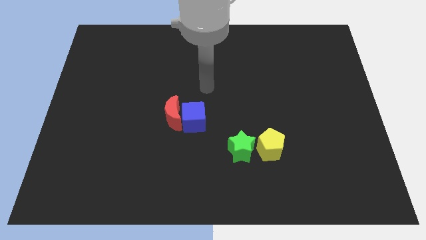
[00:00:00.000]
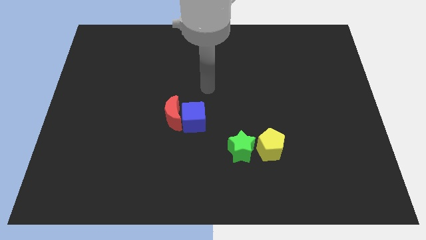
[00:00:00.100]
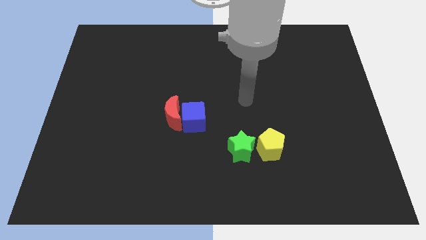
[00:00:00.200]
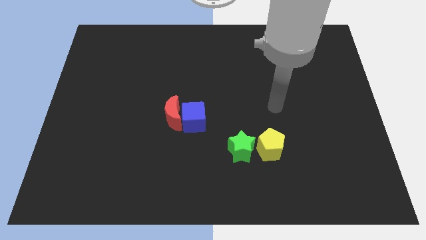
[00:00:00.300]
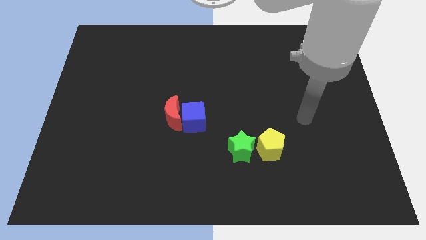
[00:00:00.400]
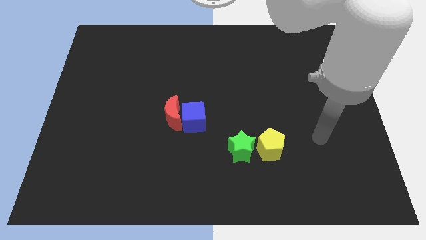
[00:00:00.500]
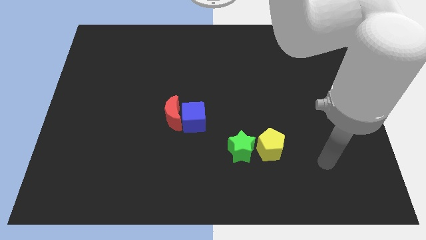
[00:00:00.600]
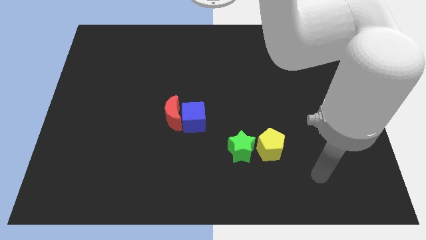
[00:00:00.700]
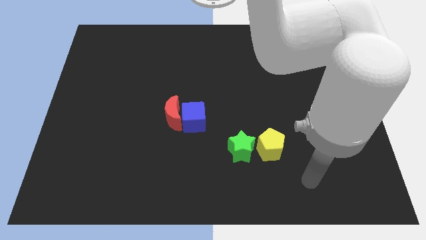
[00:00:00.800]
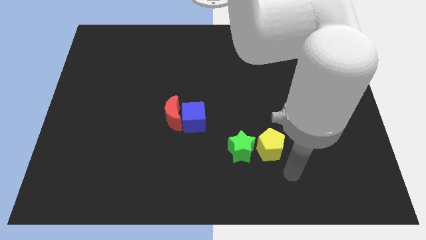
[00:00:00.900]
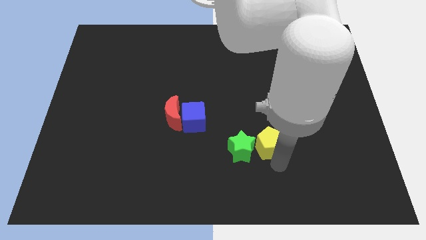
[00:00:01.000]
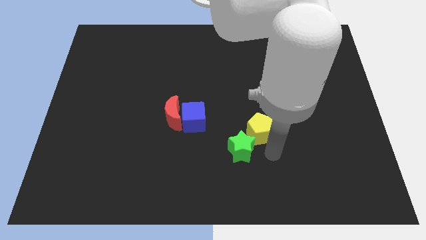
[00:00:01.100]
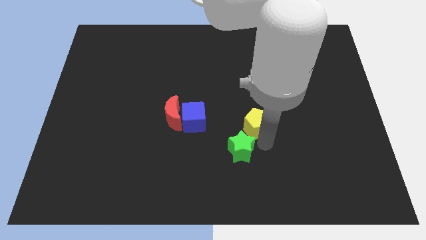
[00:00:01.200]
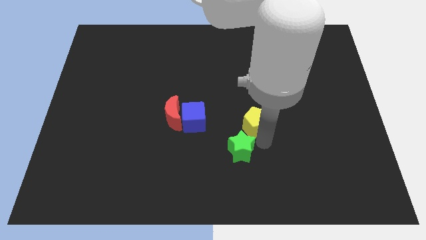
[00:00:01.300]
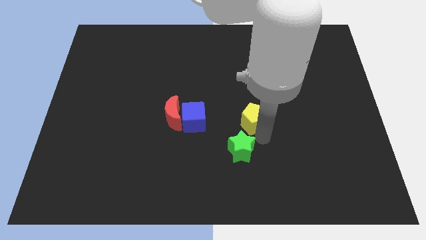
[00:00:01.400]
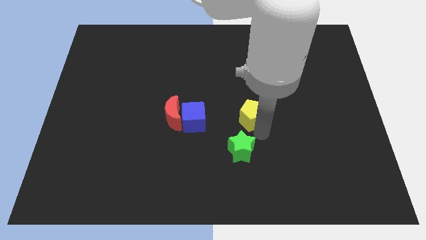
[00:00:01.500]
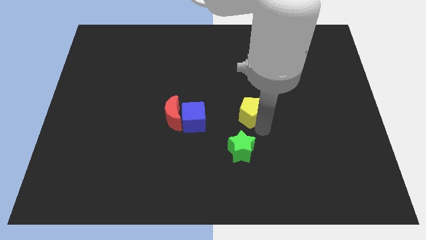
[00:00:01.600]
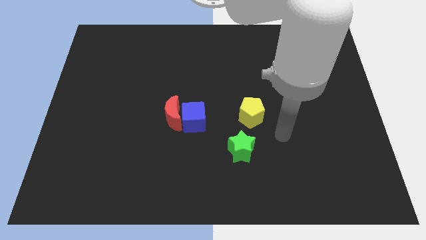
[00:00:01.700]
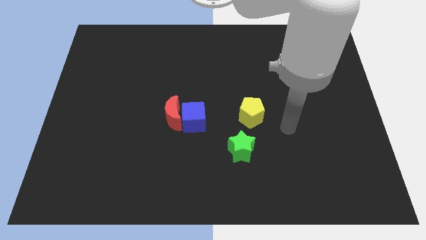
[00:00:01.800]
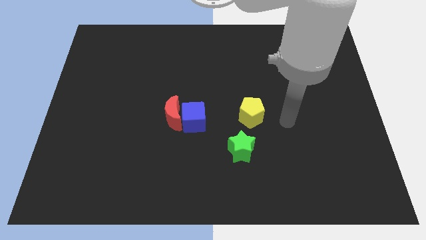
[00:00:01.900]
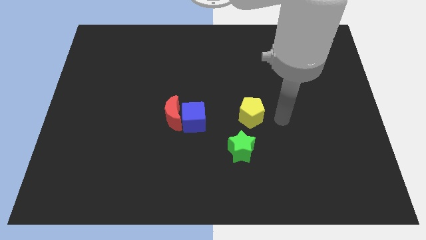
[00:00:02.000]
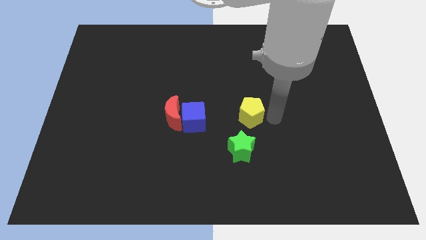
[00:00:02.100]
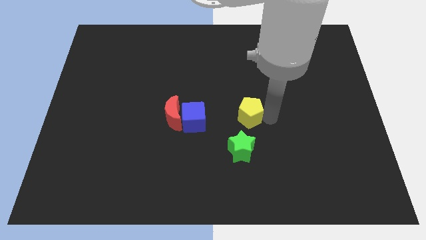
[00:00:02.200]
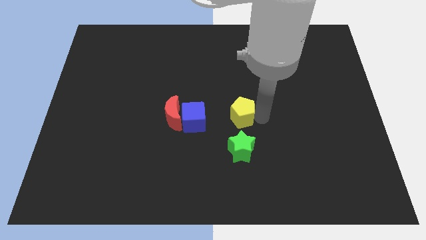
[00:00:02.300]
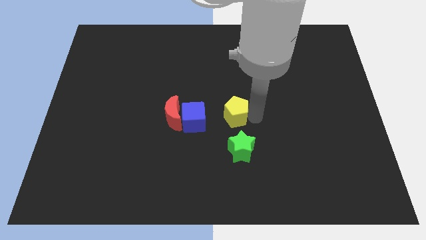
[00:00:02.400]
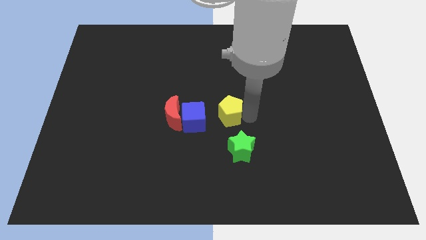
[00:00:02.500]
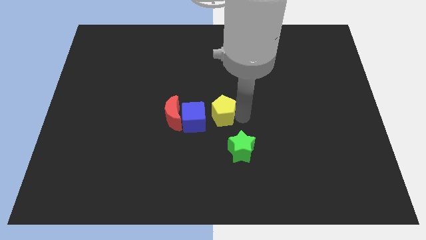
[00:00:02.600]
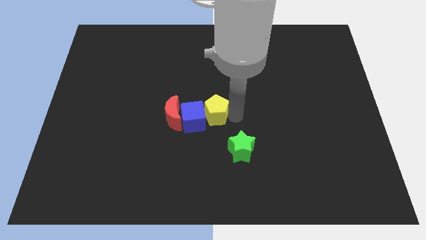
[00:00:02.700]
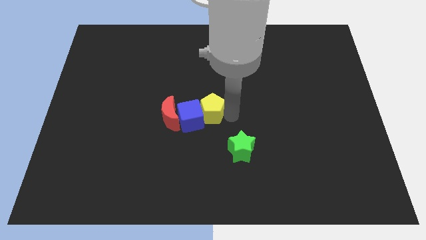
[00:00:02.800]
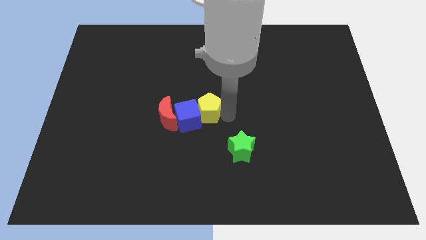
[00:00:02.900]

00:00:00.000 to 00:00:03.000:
push the yellow pentagon to the blue cube

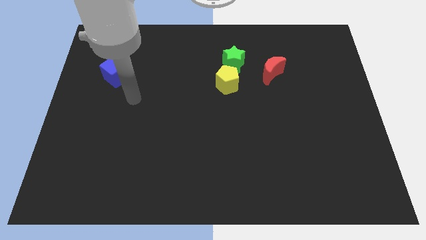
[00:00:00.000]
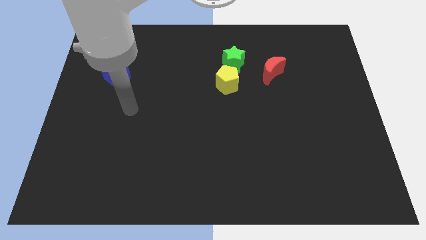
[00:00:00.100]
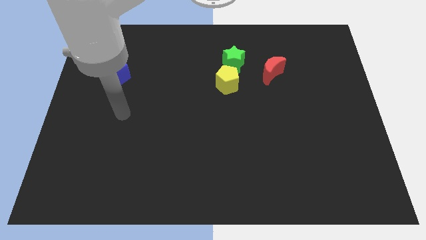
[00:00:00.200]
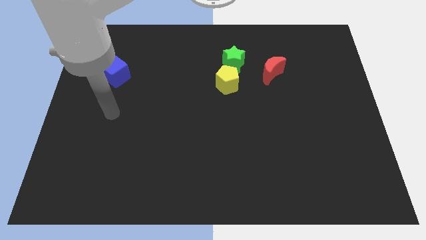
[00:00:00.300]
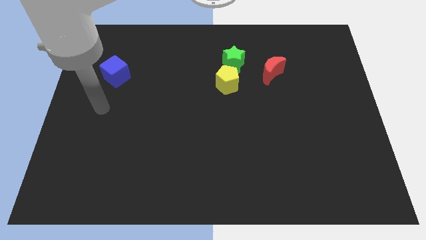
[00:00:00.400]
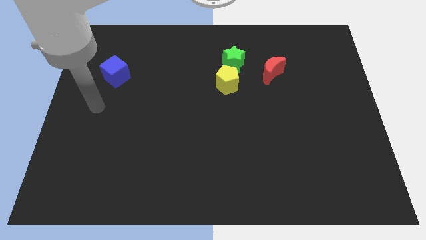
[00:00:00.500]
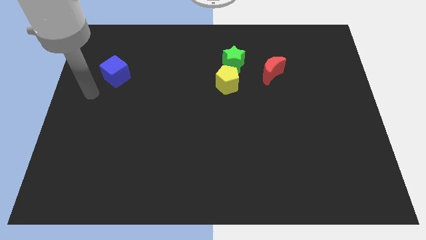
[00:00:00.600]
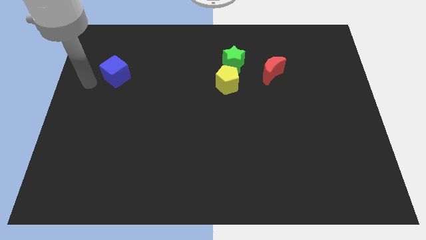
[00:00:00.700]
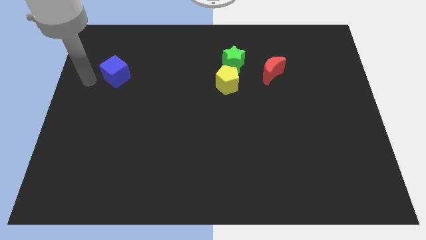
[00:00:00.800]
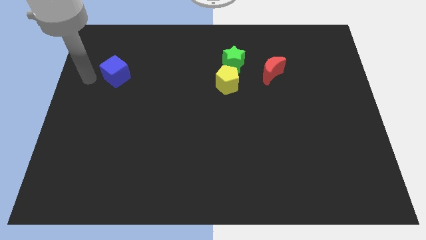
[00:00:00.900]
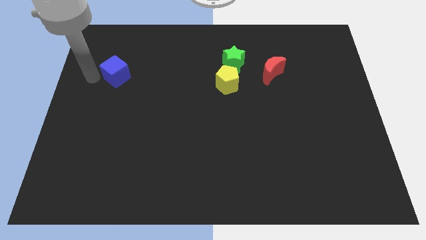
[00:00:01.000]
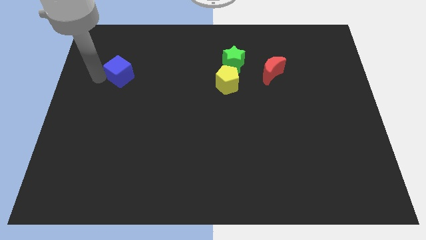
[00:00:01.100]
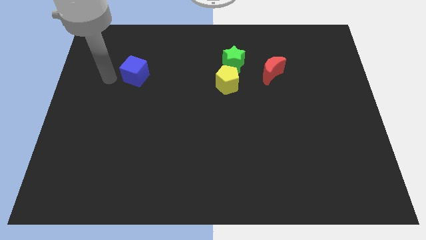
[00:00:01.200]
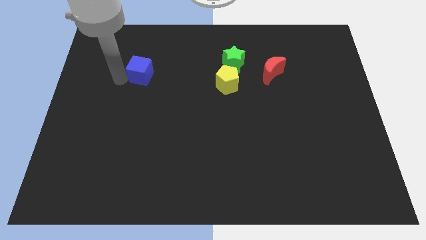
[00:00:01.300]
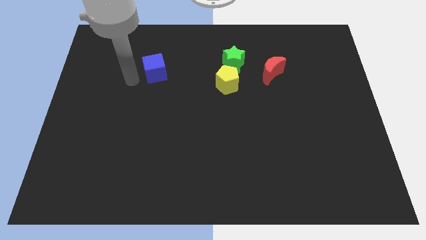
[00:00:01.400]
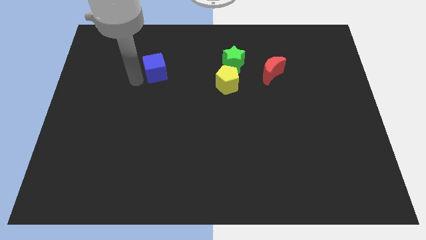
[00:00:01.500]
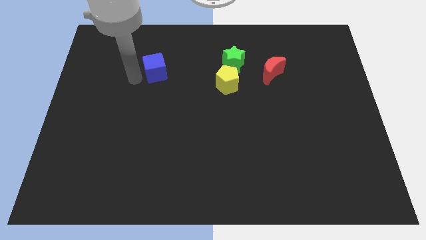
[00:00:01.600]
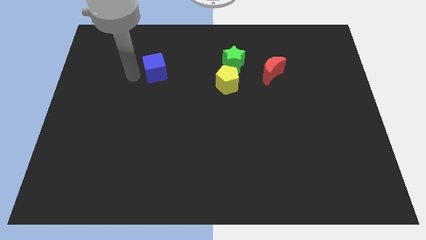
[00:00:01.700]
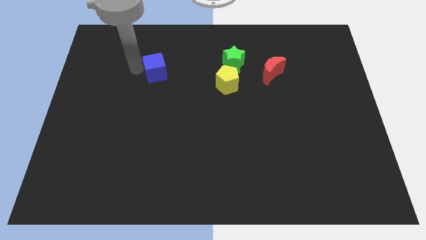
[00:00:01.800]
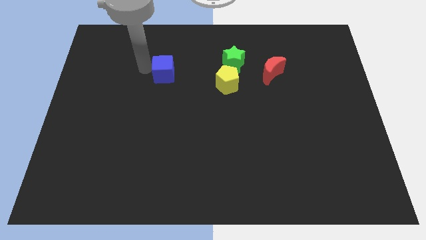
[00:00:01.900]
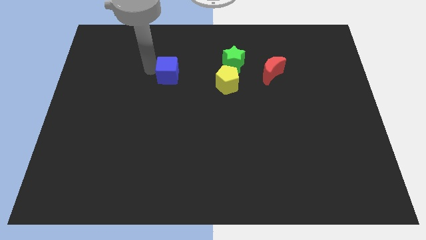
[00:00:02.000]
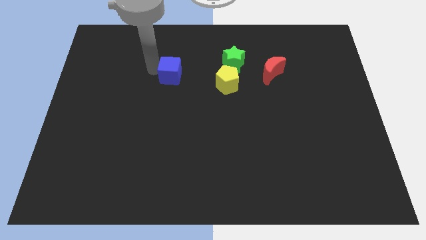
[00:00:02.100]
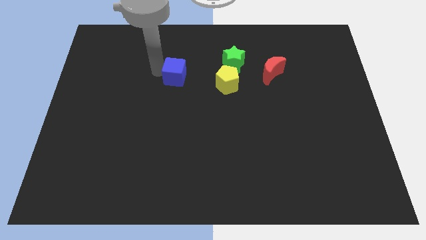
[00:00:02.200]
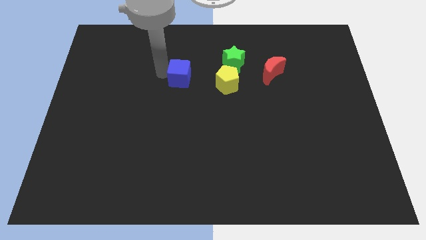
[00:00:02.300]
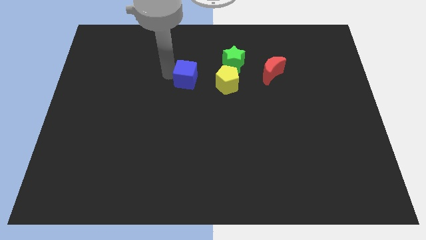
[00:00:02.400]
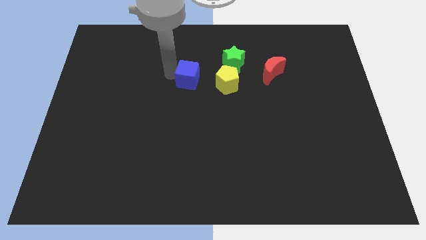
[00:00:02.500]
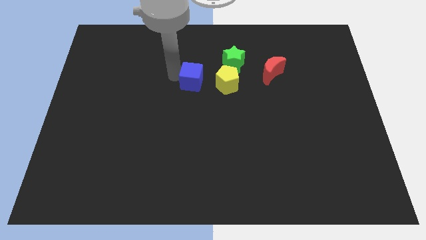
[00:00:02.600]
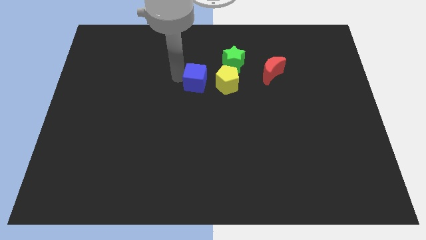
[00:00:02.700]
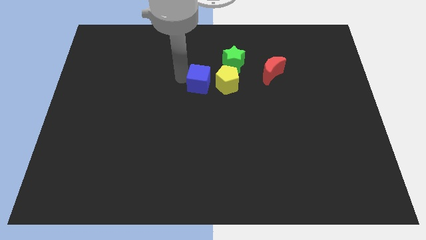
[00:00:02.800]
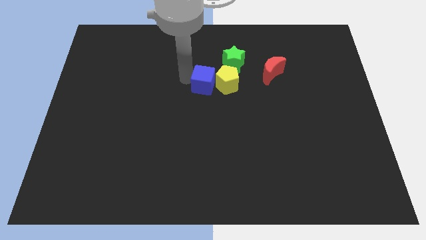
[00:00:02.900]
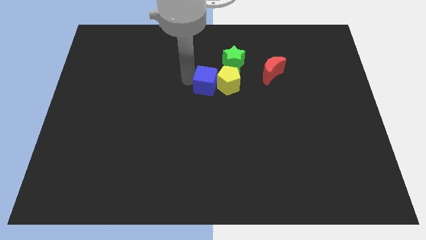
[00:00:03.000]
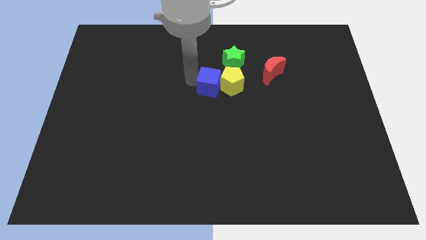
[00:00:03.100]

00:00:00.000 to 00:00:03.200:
move the blue cube to the pentagon

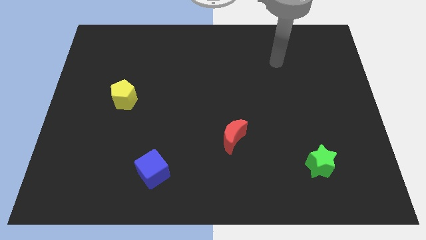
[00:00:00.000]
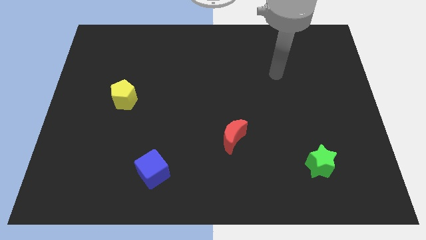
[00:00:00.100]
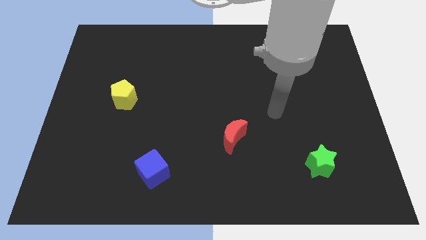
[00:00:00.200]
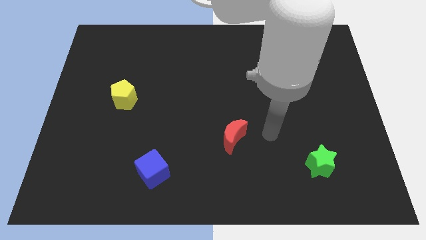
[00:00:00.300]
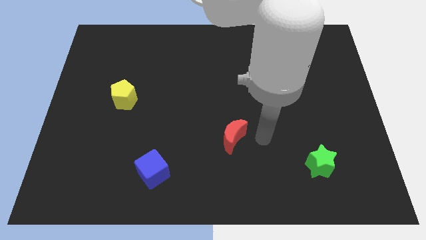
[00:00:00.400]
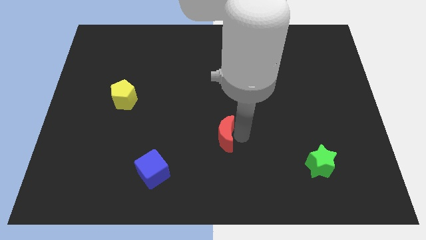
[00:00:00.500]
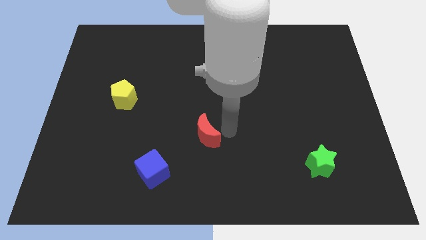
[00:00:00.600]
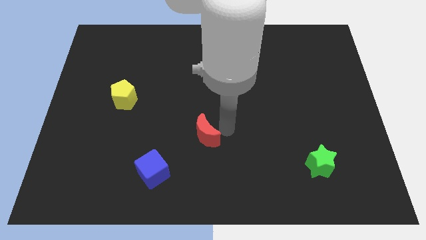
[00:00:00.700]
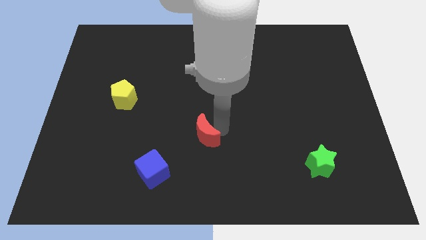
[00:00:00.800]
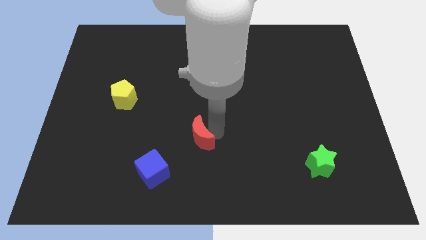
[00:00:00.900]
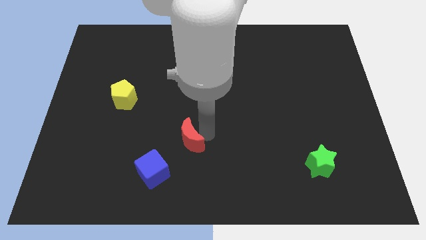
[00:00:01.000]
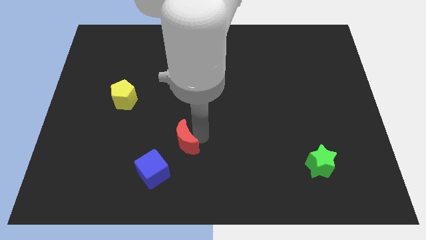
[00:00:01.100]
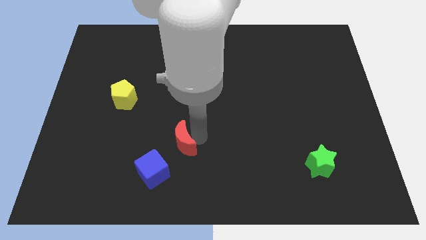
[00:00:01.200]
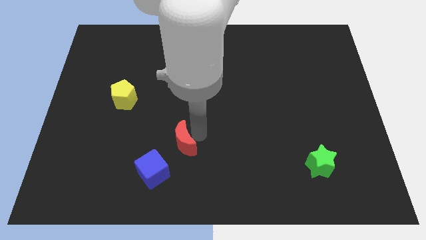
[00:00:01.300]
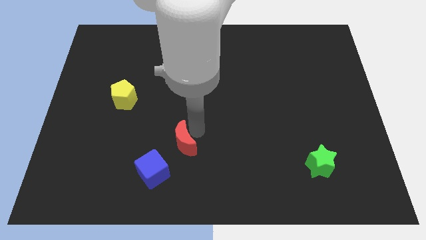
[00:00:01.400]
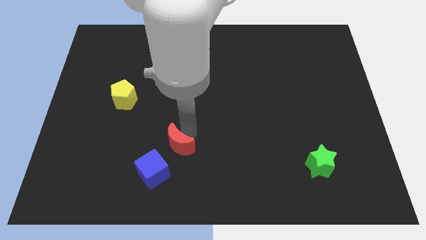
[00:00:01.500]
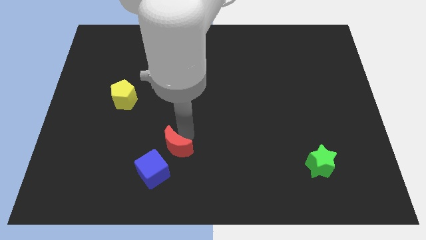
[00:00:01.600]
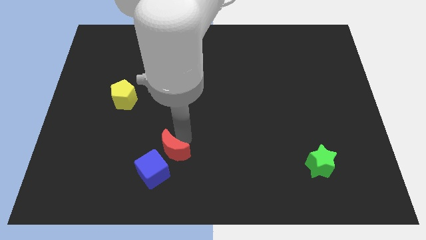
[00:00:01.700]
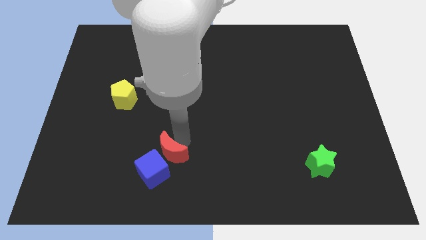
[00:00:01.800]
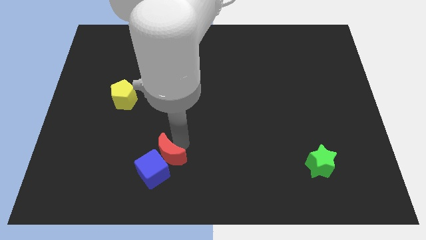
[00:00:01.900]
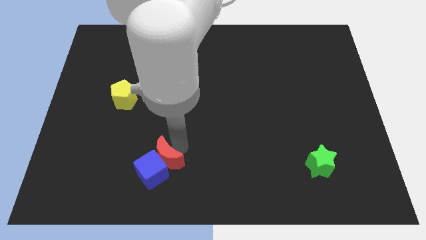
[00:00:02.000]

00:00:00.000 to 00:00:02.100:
push the red moon close to the cube

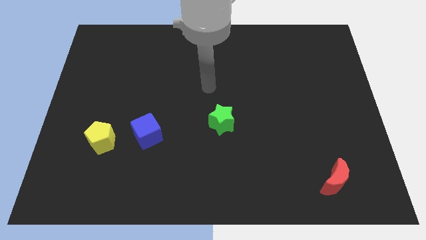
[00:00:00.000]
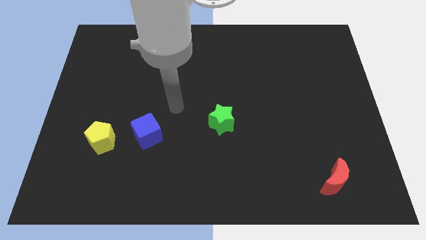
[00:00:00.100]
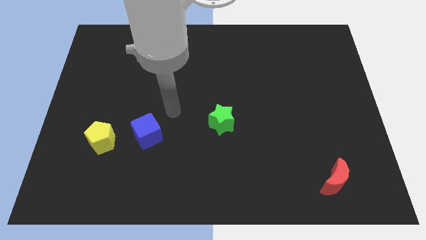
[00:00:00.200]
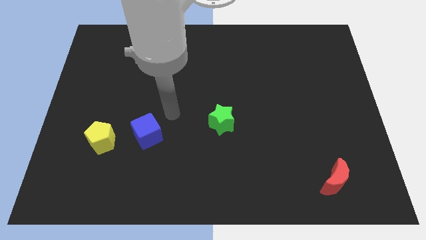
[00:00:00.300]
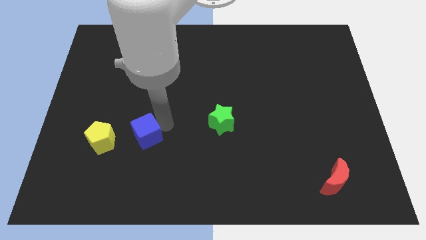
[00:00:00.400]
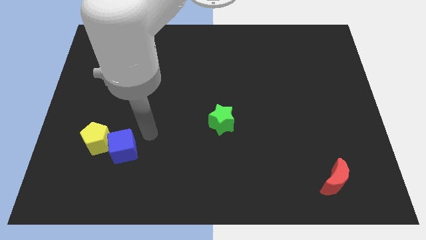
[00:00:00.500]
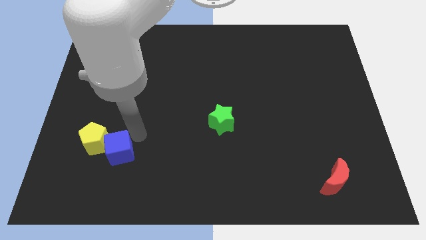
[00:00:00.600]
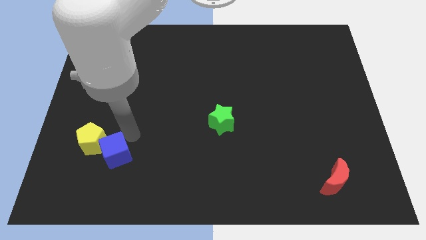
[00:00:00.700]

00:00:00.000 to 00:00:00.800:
slide the cube towards the pentagon
